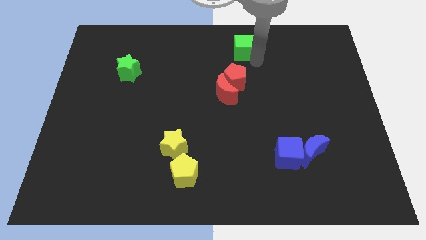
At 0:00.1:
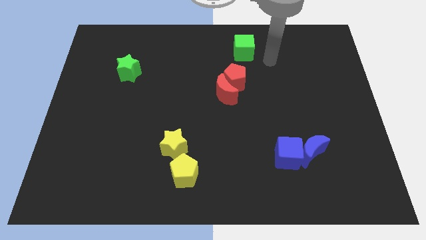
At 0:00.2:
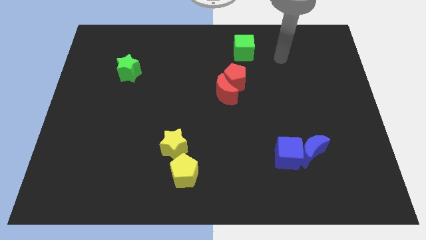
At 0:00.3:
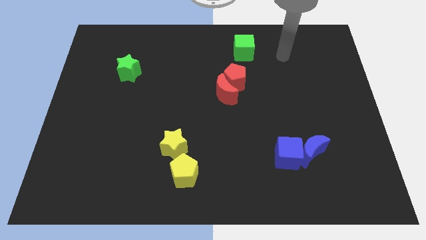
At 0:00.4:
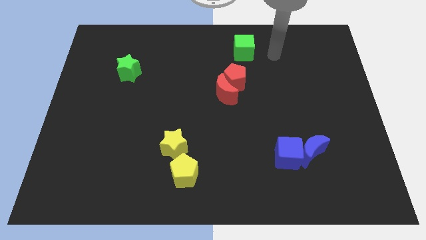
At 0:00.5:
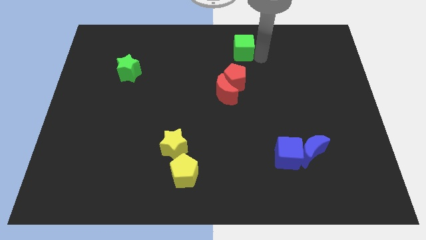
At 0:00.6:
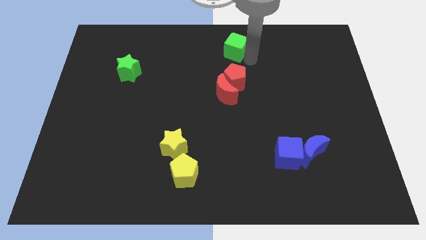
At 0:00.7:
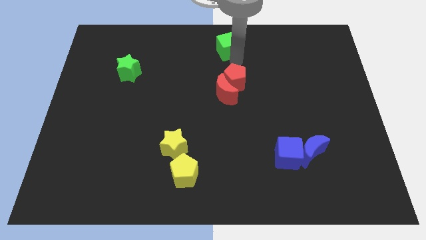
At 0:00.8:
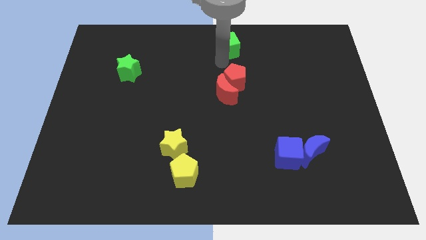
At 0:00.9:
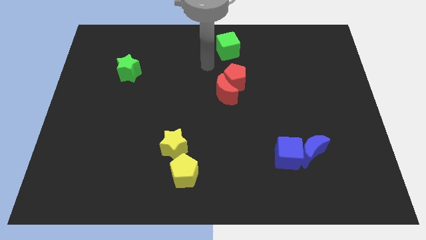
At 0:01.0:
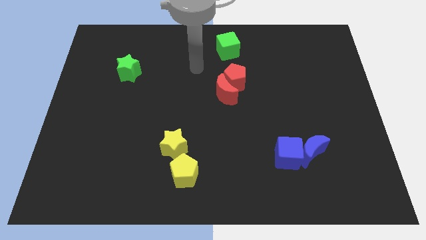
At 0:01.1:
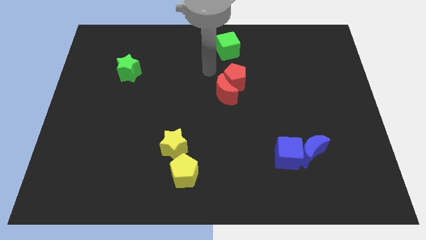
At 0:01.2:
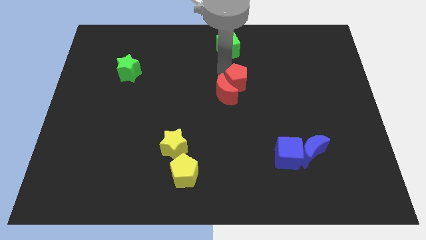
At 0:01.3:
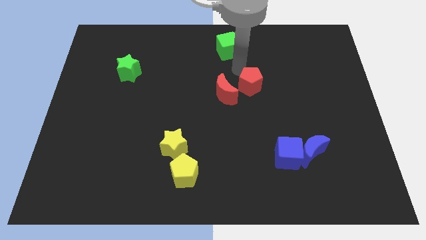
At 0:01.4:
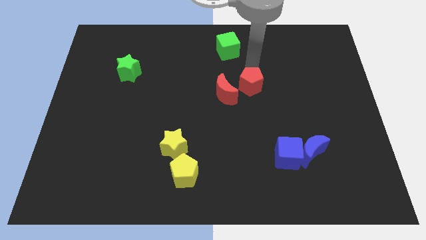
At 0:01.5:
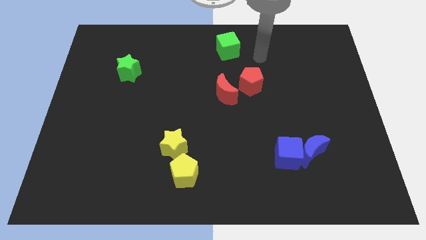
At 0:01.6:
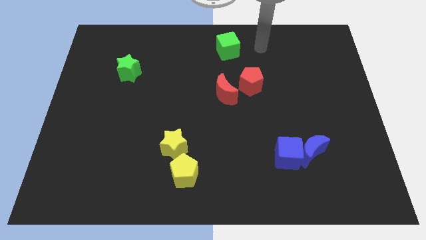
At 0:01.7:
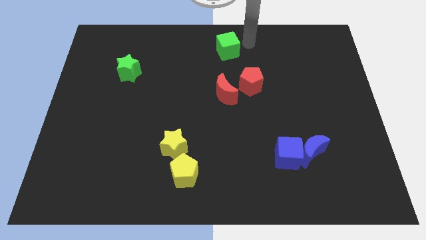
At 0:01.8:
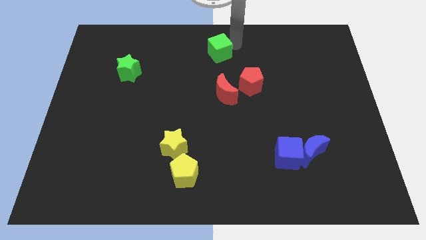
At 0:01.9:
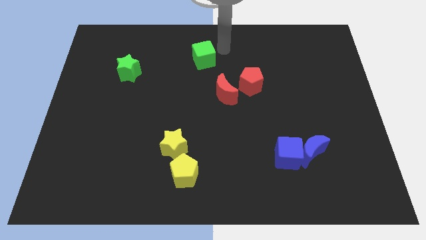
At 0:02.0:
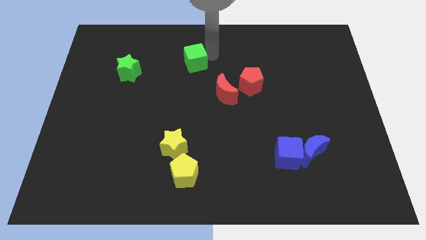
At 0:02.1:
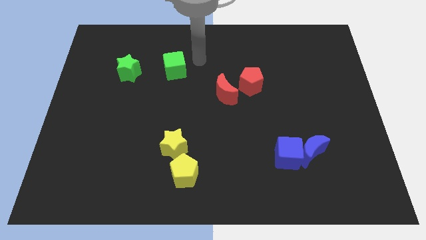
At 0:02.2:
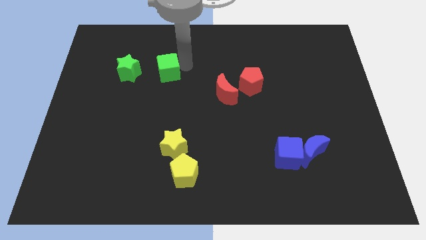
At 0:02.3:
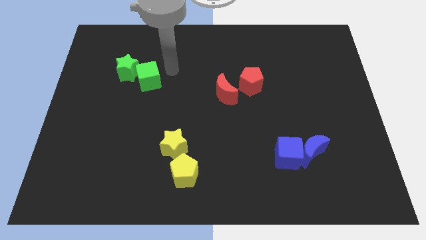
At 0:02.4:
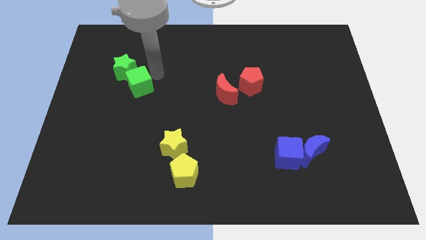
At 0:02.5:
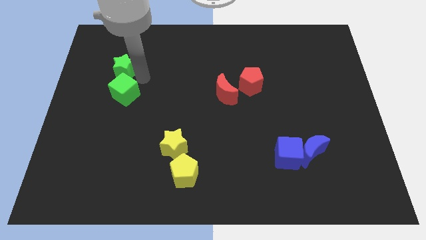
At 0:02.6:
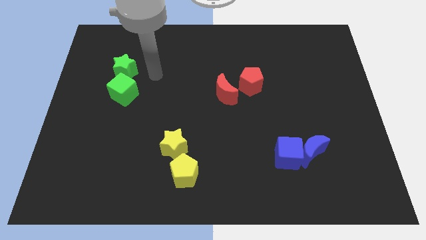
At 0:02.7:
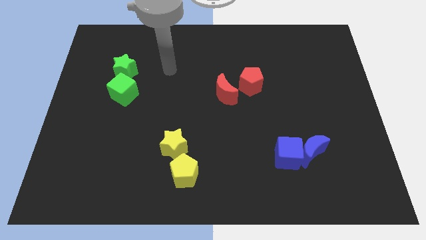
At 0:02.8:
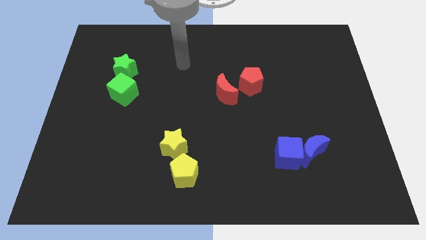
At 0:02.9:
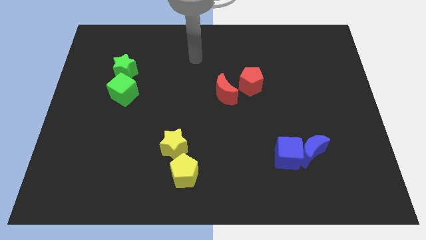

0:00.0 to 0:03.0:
place the green cube at the bottom of the green star

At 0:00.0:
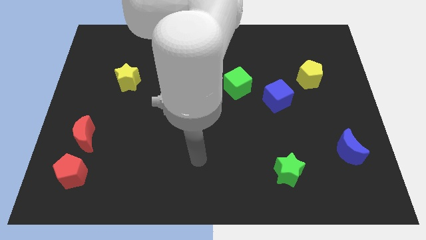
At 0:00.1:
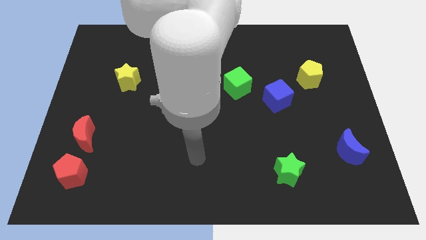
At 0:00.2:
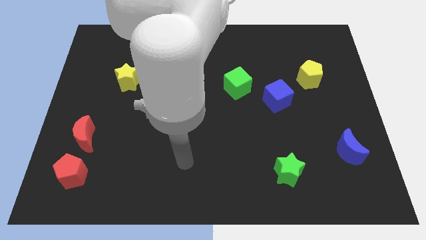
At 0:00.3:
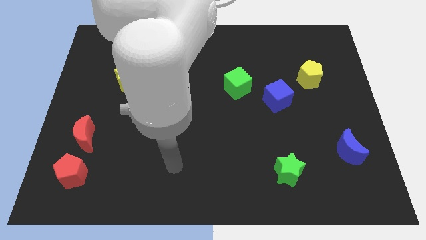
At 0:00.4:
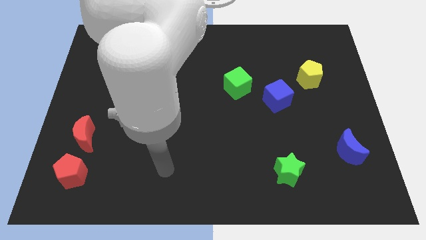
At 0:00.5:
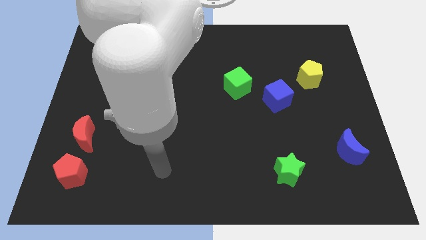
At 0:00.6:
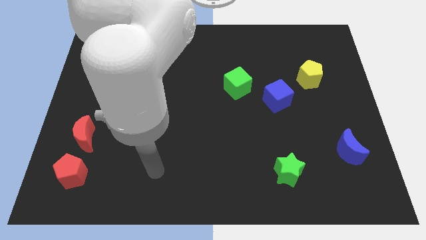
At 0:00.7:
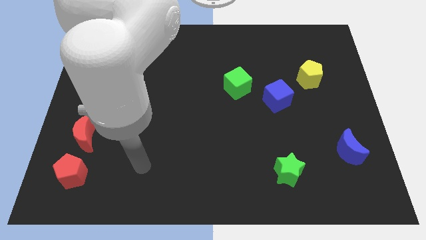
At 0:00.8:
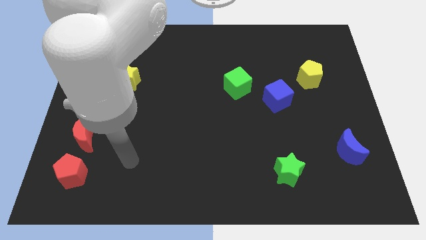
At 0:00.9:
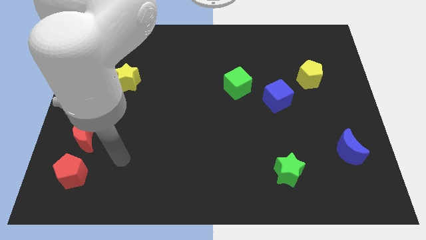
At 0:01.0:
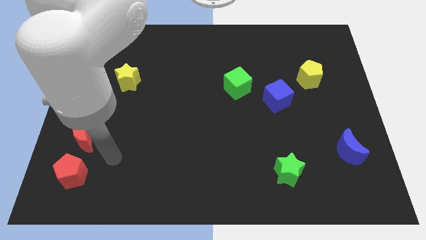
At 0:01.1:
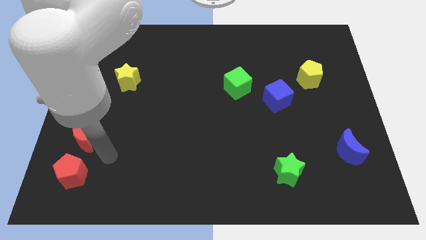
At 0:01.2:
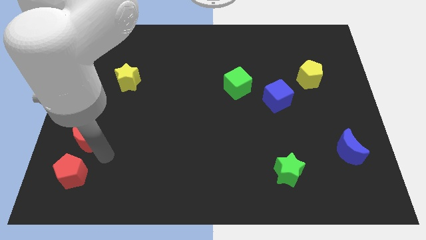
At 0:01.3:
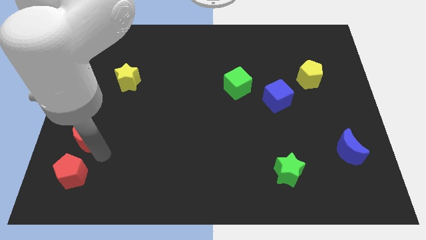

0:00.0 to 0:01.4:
point your arm at the right of the red crescent

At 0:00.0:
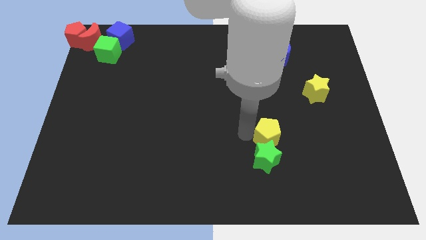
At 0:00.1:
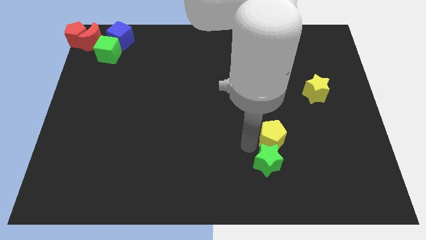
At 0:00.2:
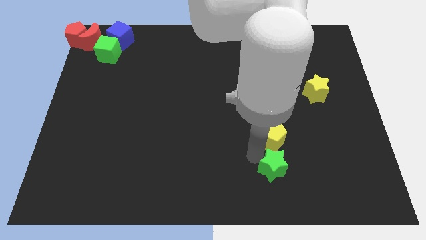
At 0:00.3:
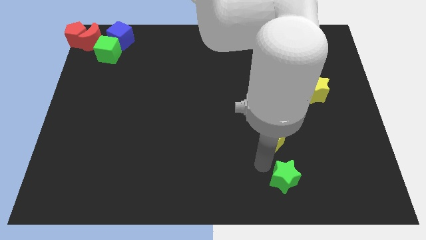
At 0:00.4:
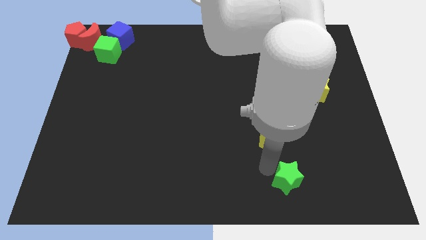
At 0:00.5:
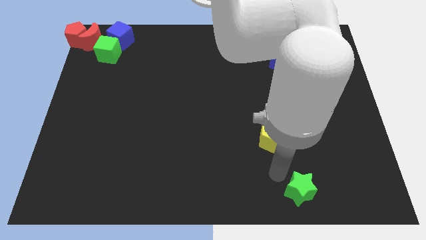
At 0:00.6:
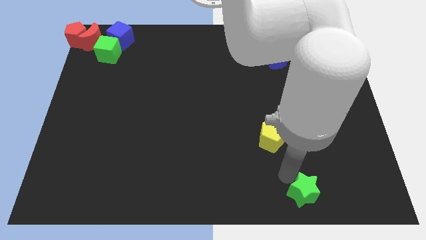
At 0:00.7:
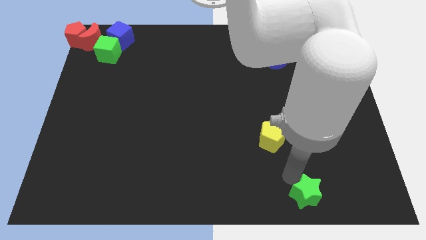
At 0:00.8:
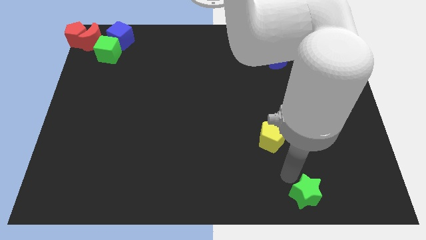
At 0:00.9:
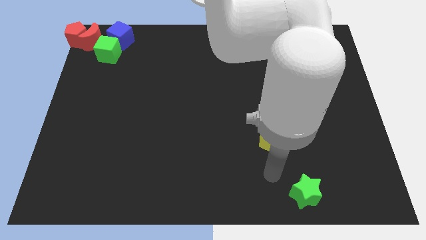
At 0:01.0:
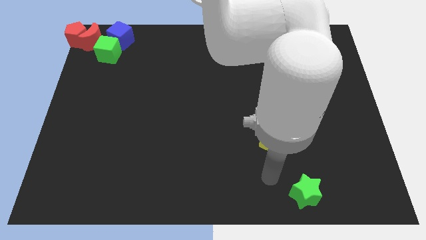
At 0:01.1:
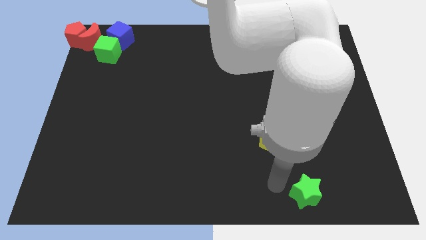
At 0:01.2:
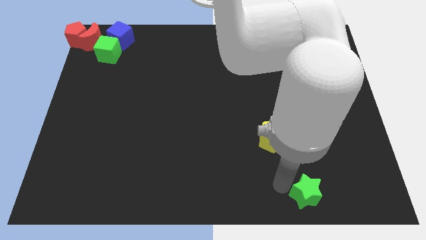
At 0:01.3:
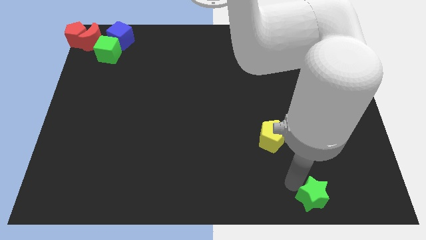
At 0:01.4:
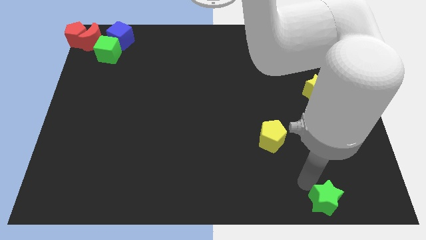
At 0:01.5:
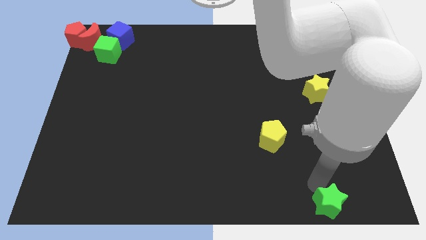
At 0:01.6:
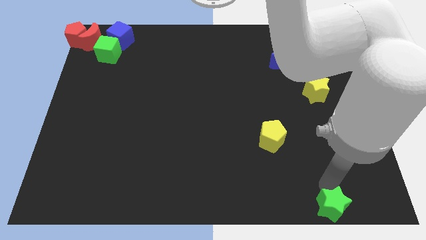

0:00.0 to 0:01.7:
separate green star from the yellow pentagon

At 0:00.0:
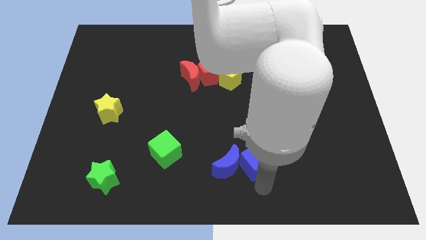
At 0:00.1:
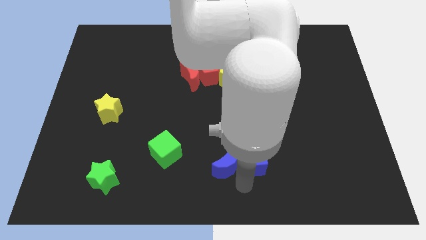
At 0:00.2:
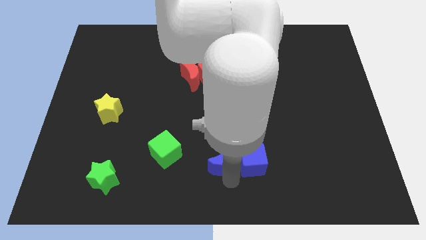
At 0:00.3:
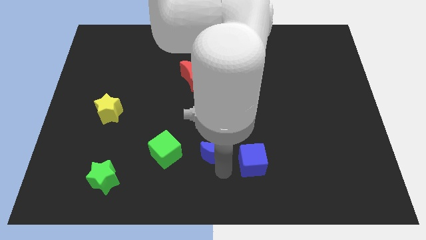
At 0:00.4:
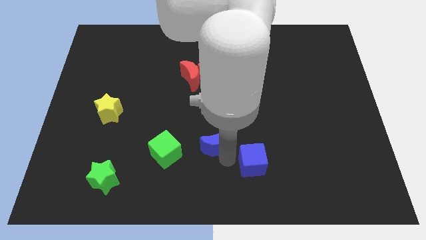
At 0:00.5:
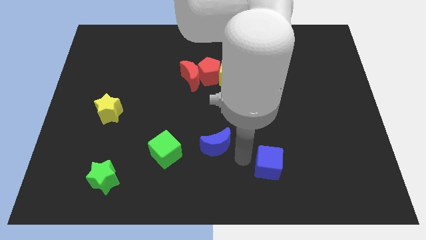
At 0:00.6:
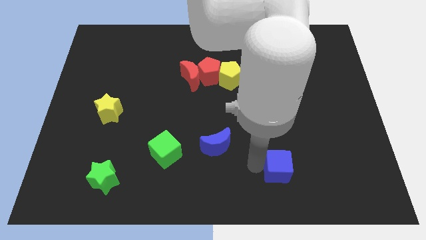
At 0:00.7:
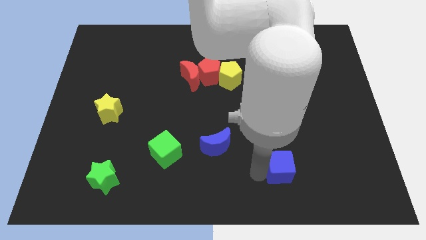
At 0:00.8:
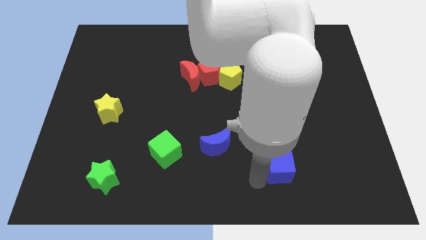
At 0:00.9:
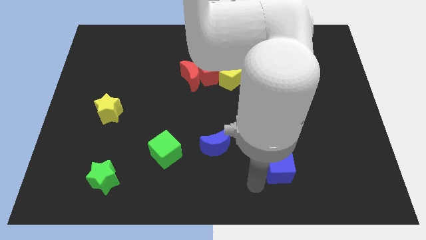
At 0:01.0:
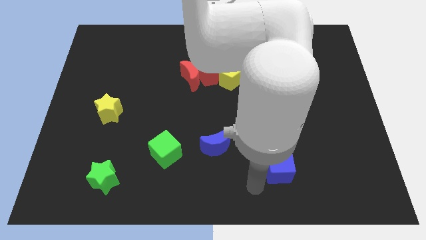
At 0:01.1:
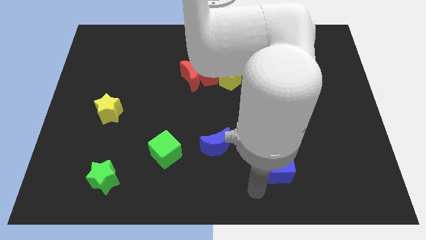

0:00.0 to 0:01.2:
separate blue moon from blue cube

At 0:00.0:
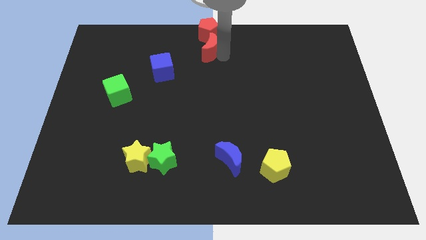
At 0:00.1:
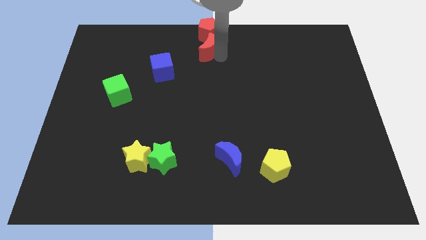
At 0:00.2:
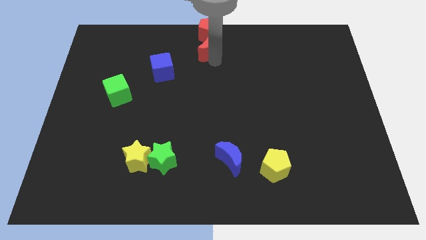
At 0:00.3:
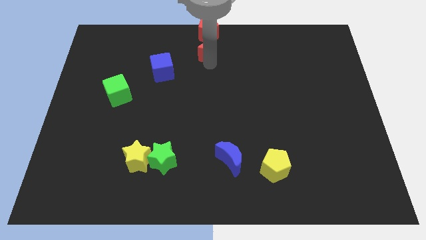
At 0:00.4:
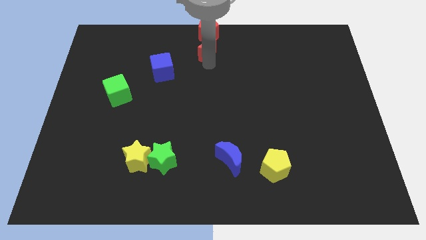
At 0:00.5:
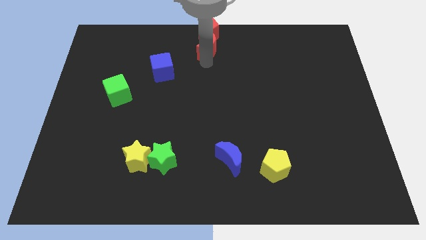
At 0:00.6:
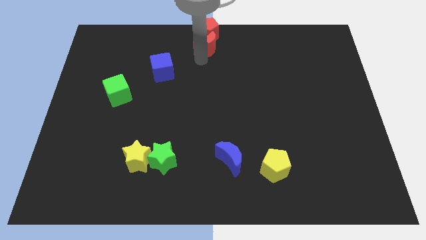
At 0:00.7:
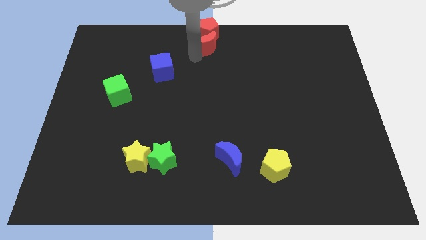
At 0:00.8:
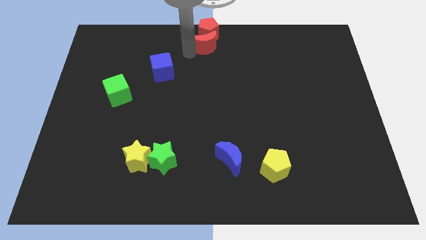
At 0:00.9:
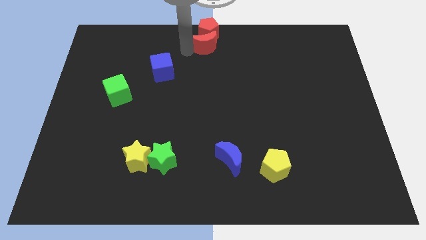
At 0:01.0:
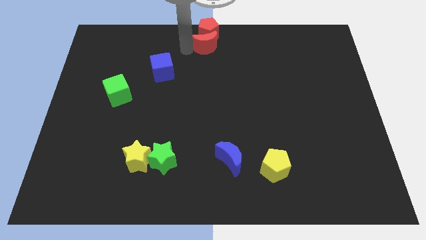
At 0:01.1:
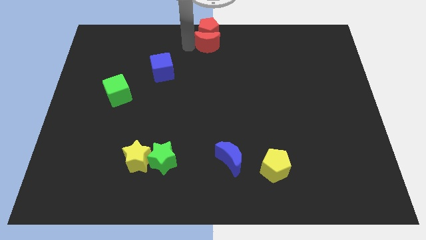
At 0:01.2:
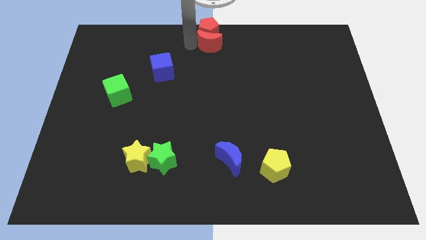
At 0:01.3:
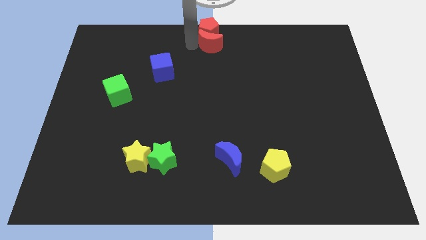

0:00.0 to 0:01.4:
push the red crescent into the red pentagon

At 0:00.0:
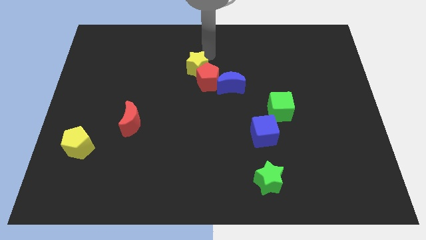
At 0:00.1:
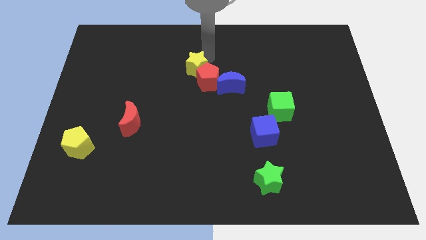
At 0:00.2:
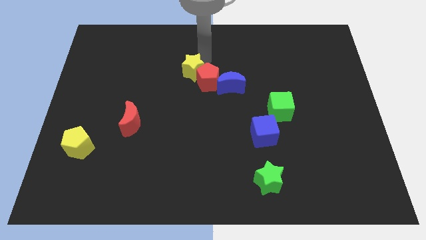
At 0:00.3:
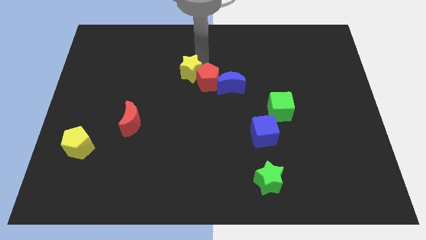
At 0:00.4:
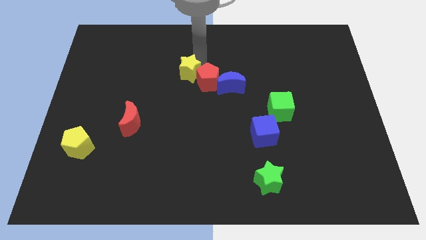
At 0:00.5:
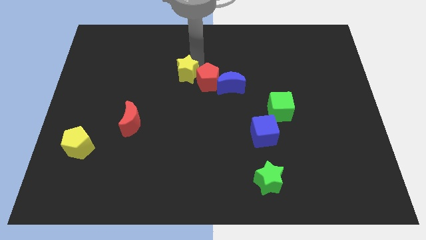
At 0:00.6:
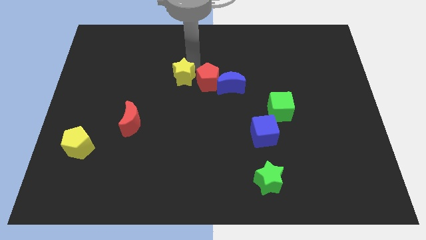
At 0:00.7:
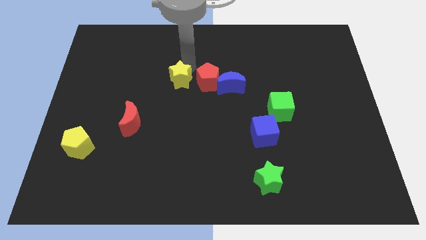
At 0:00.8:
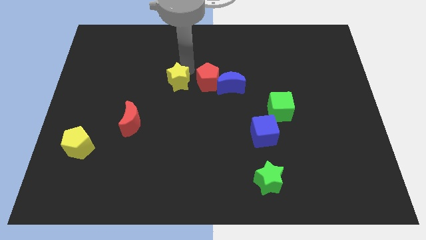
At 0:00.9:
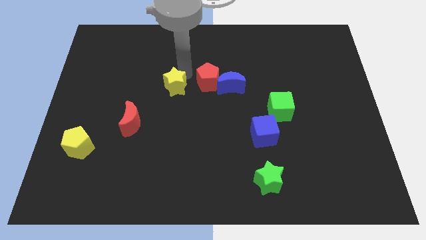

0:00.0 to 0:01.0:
place the yellow star to the left of the red pentagon
